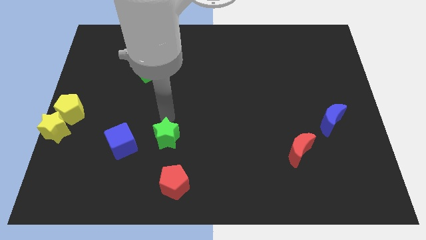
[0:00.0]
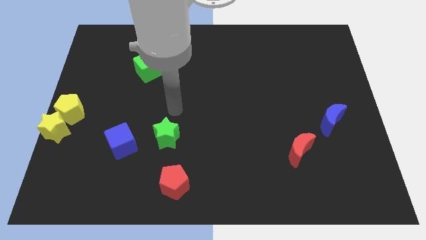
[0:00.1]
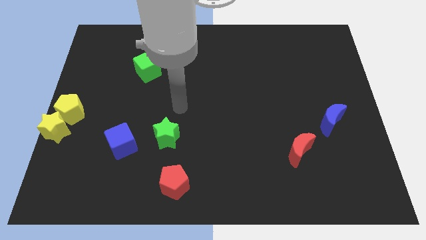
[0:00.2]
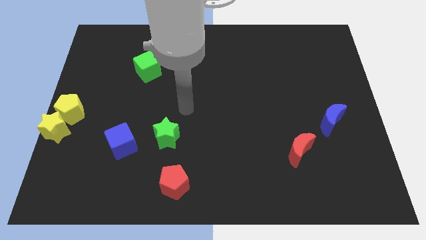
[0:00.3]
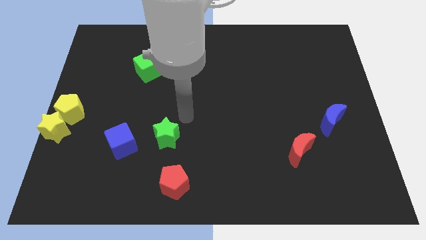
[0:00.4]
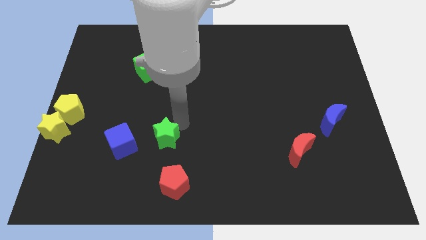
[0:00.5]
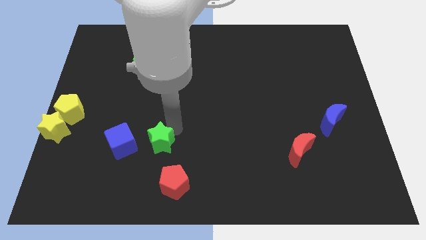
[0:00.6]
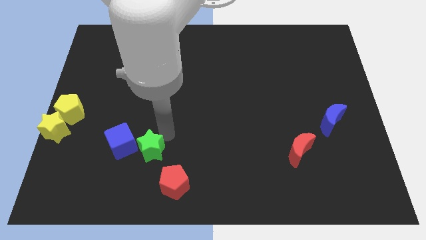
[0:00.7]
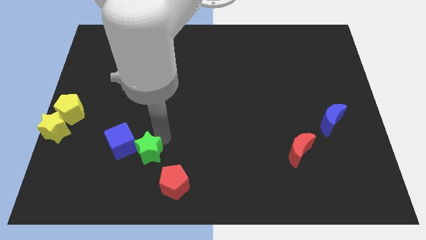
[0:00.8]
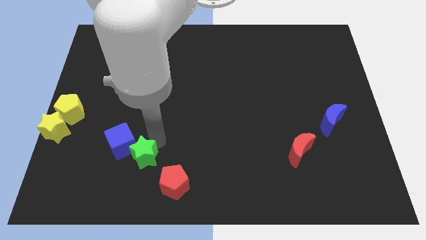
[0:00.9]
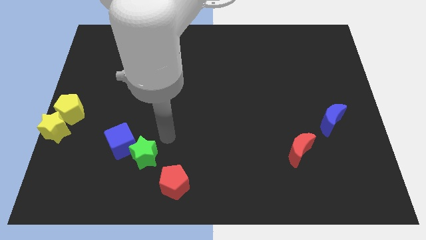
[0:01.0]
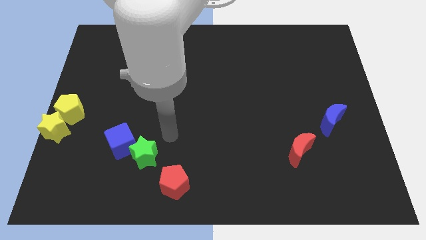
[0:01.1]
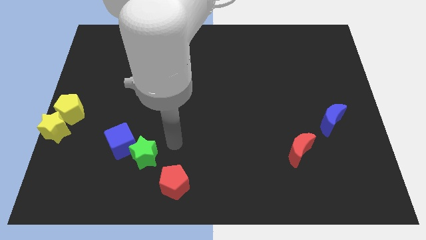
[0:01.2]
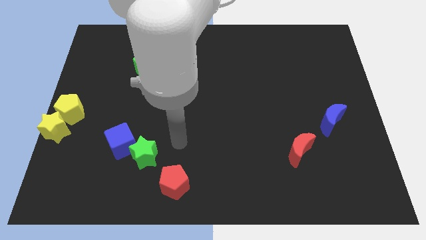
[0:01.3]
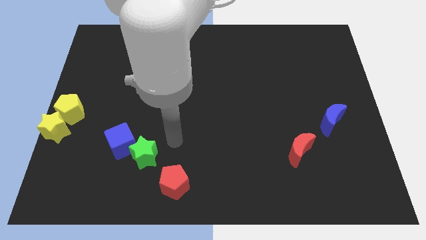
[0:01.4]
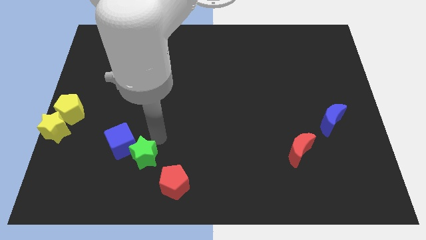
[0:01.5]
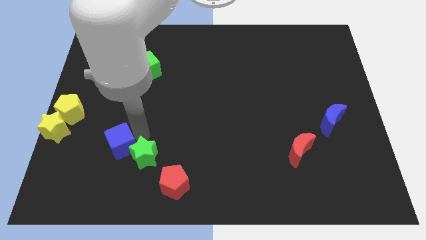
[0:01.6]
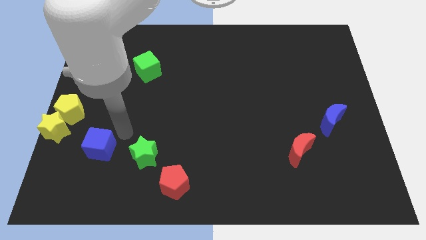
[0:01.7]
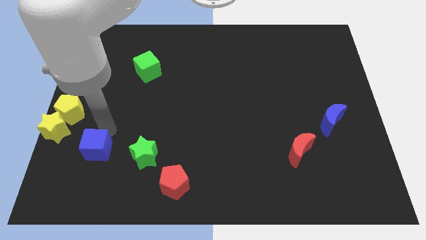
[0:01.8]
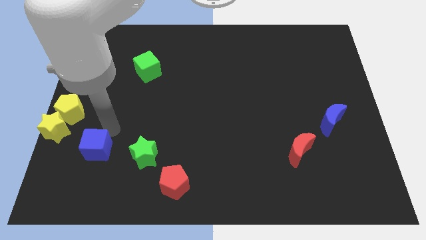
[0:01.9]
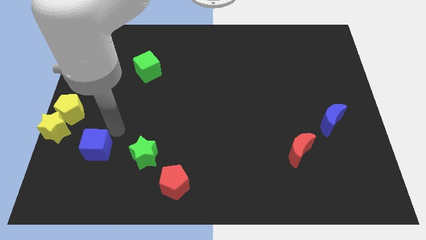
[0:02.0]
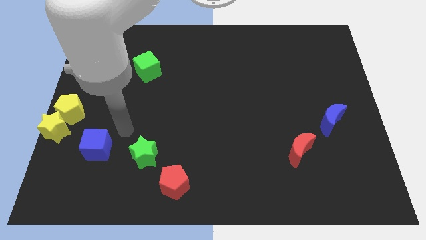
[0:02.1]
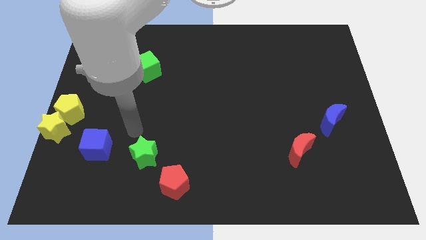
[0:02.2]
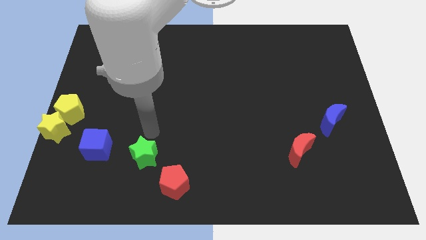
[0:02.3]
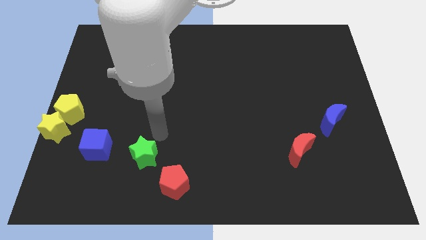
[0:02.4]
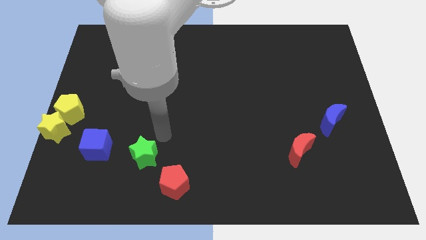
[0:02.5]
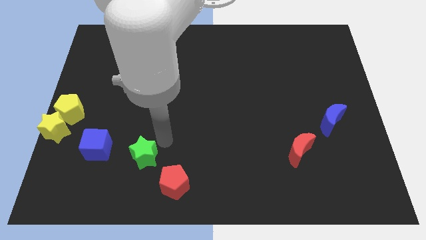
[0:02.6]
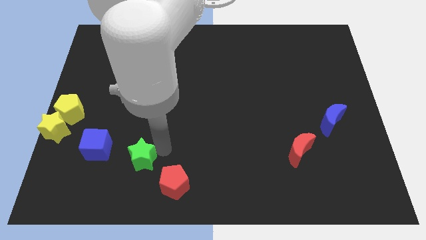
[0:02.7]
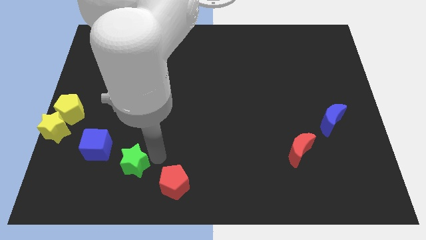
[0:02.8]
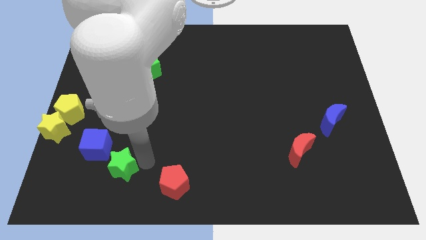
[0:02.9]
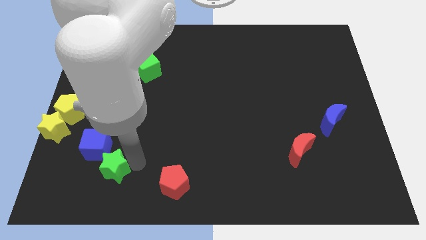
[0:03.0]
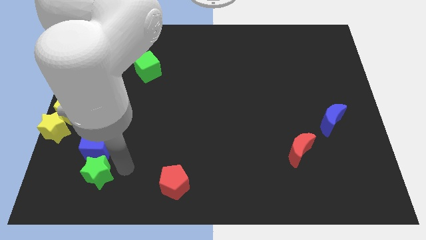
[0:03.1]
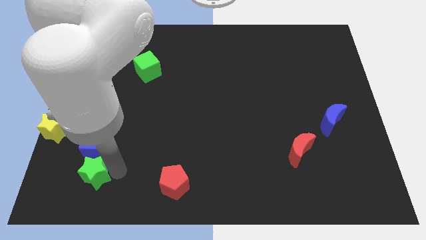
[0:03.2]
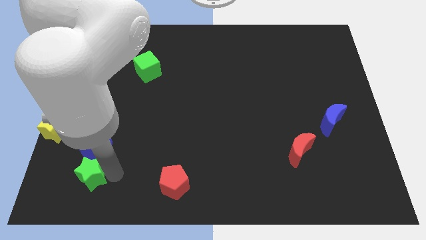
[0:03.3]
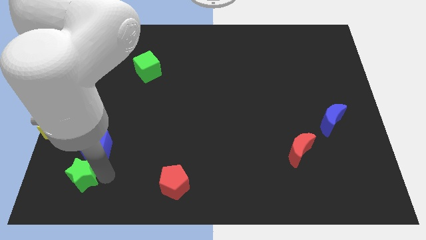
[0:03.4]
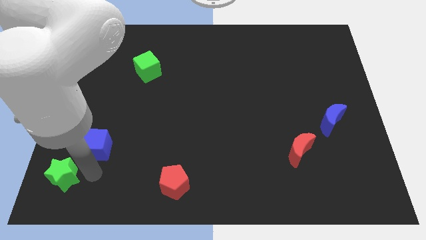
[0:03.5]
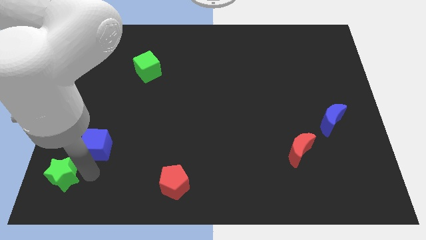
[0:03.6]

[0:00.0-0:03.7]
push the green star to the bottom left side of the blue cube

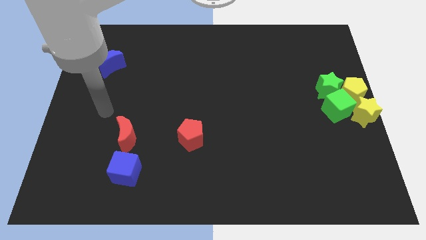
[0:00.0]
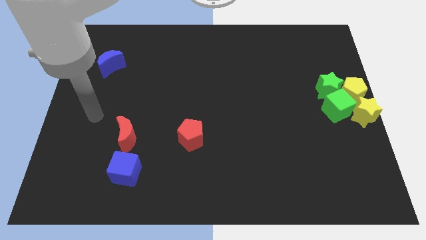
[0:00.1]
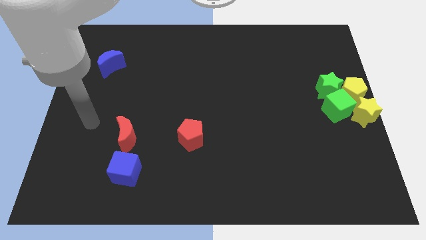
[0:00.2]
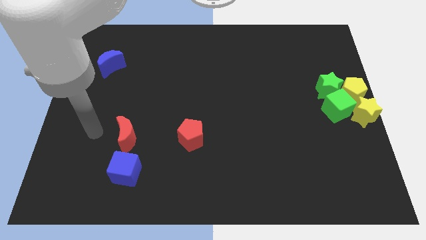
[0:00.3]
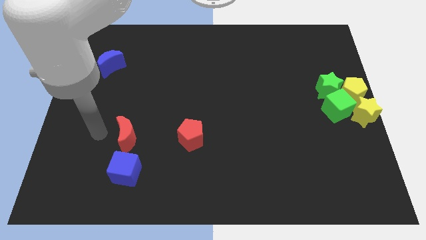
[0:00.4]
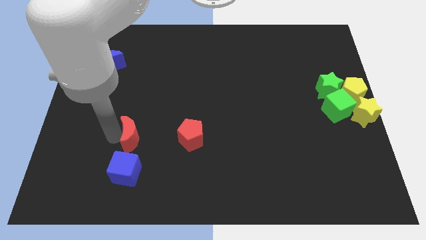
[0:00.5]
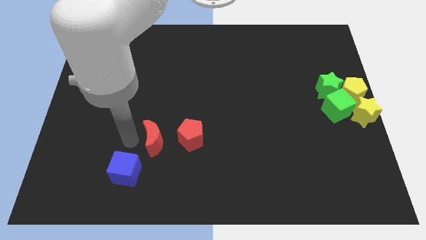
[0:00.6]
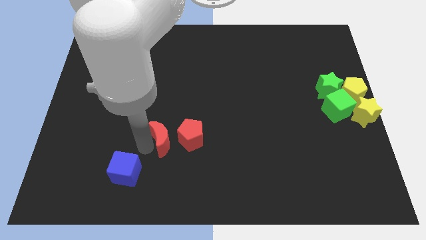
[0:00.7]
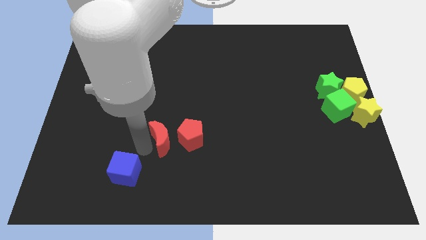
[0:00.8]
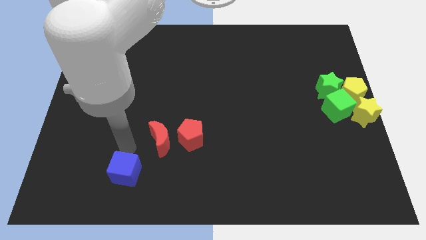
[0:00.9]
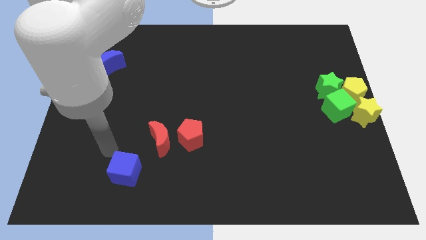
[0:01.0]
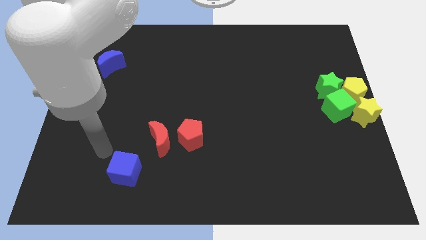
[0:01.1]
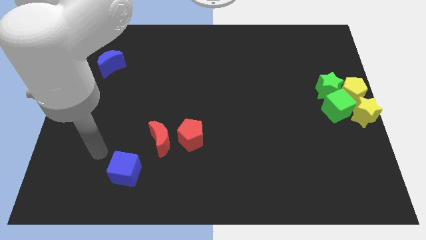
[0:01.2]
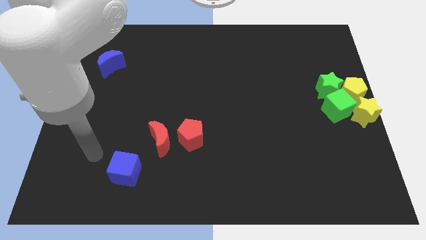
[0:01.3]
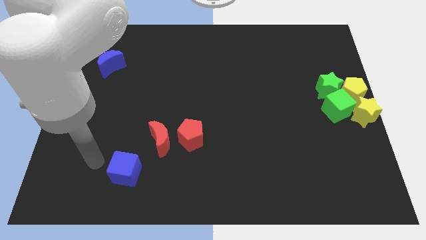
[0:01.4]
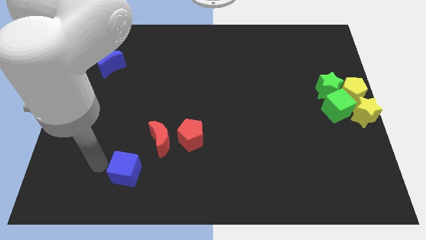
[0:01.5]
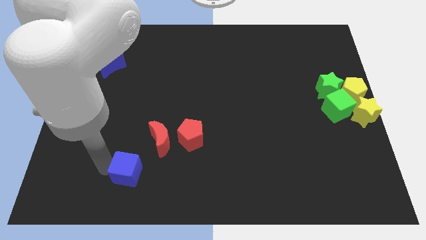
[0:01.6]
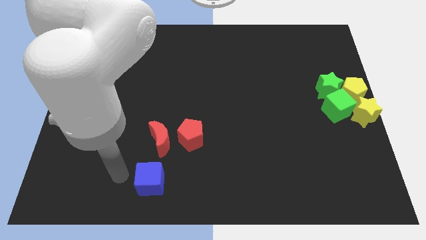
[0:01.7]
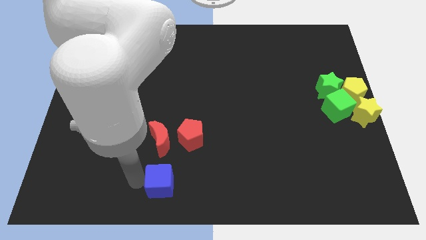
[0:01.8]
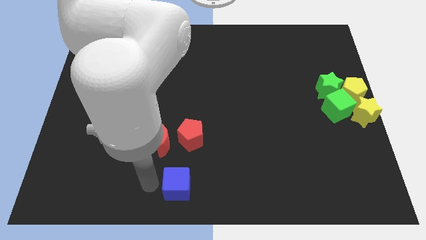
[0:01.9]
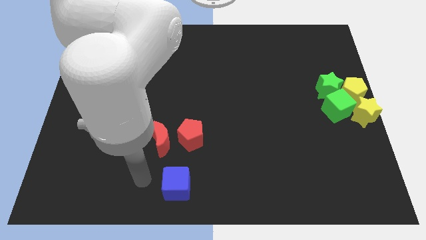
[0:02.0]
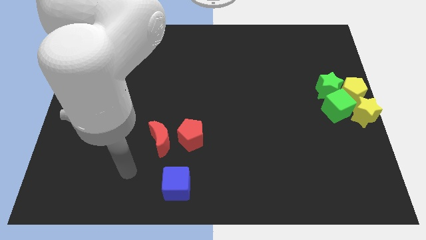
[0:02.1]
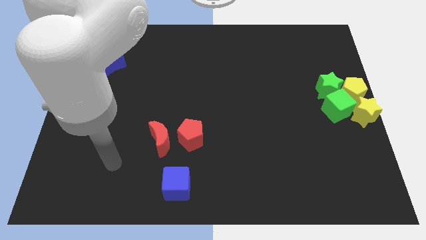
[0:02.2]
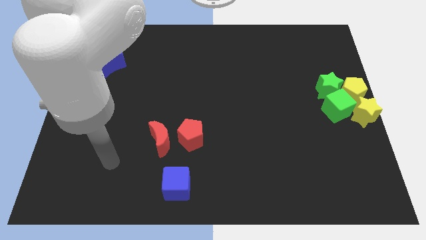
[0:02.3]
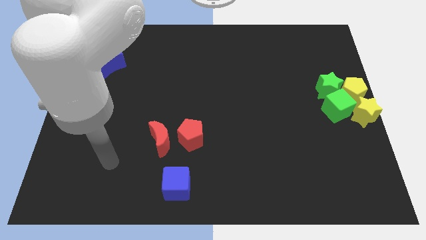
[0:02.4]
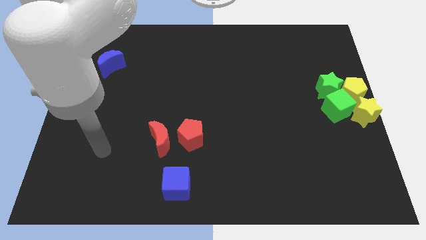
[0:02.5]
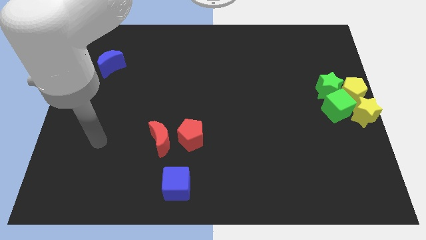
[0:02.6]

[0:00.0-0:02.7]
place the blue cube bottom right to the red moon

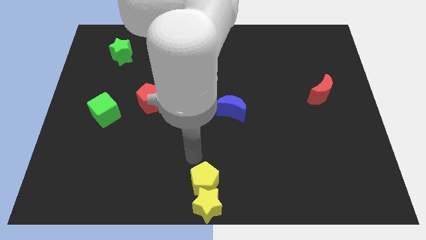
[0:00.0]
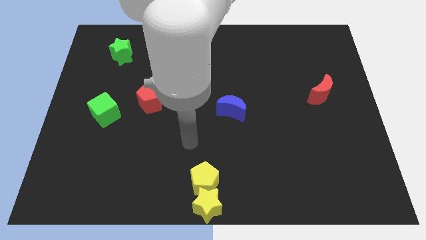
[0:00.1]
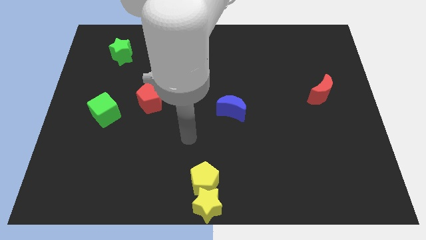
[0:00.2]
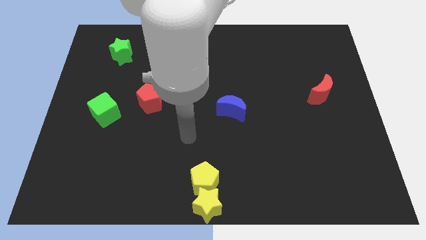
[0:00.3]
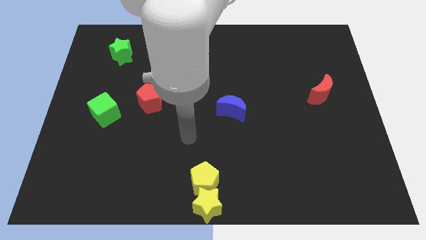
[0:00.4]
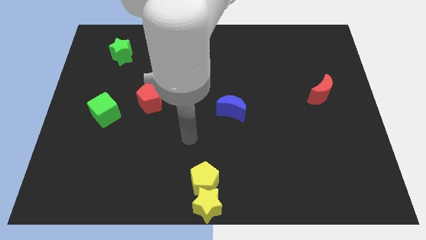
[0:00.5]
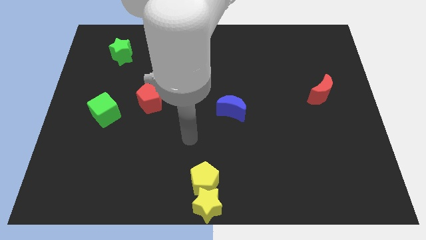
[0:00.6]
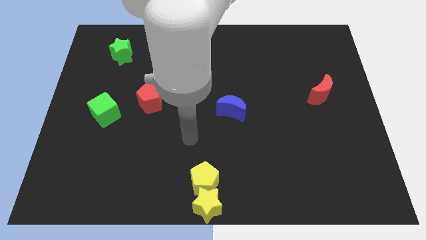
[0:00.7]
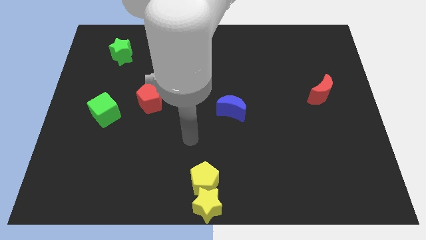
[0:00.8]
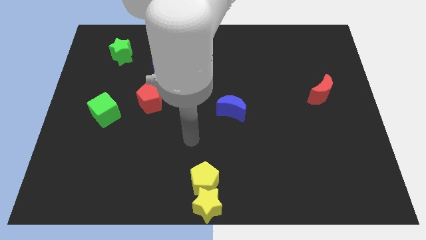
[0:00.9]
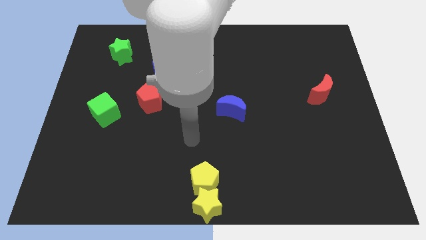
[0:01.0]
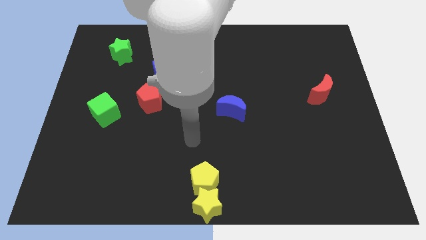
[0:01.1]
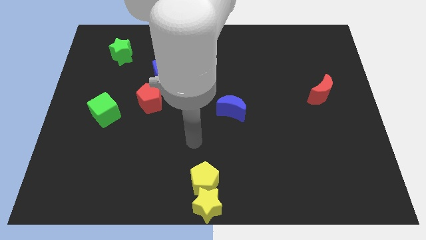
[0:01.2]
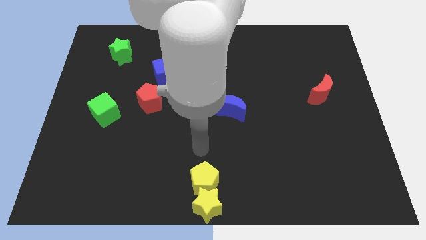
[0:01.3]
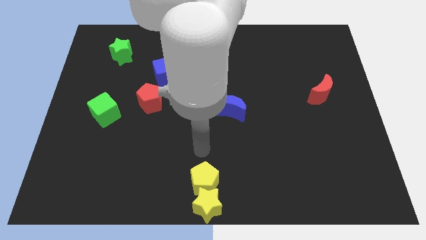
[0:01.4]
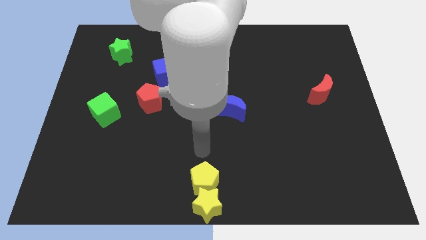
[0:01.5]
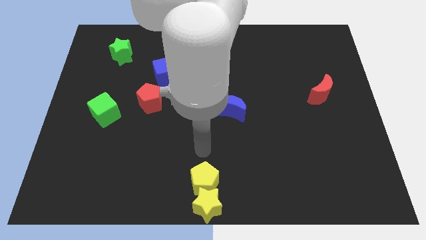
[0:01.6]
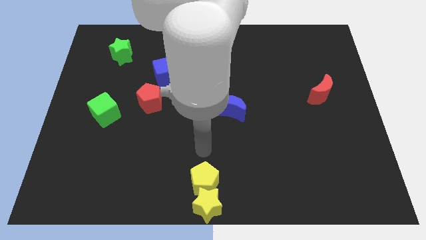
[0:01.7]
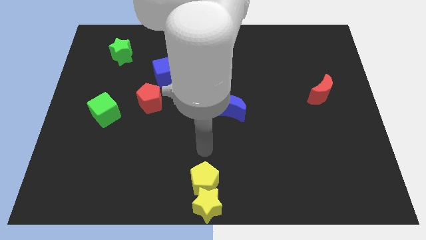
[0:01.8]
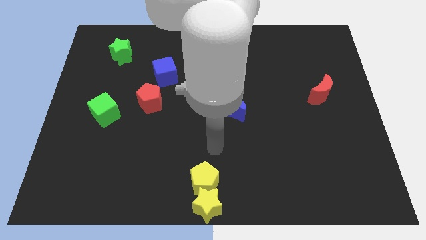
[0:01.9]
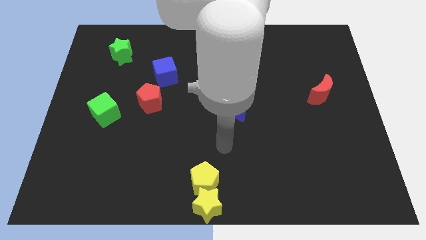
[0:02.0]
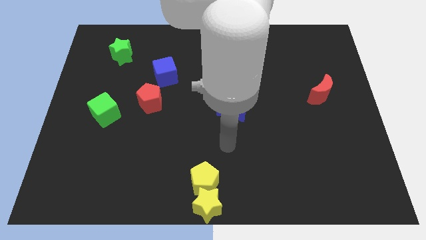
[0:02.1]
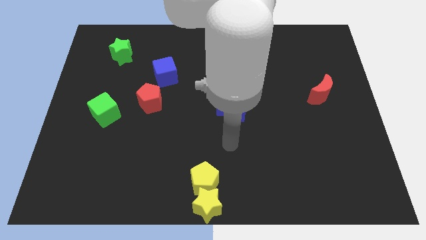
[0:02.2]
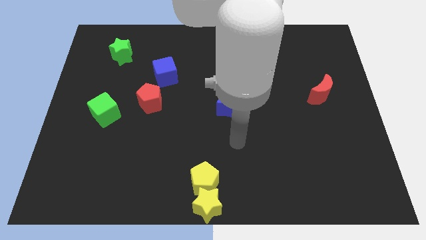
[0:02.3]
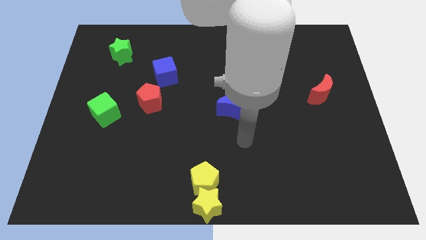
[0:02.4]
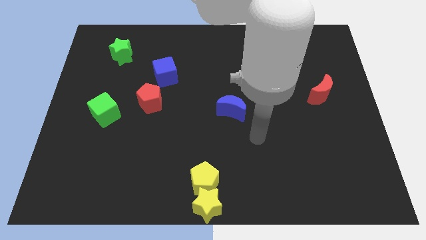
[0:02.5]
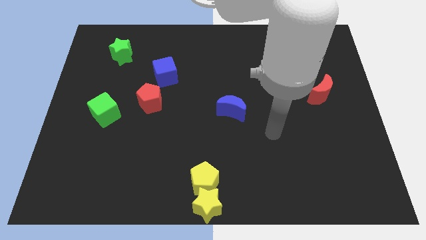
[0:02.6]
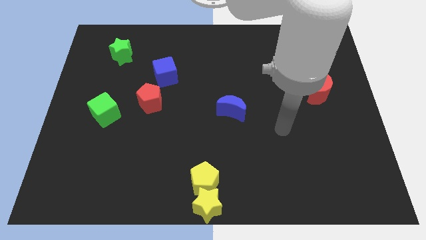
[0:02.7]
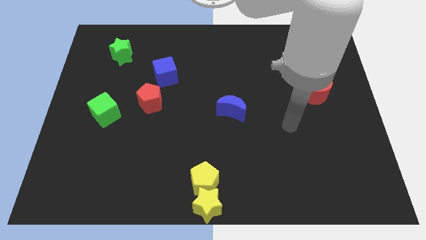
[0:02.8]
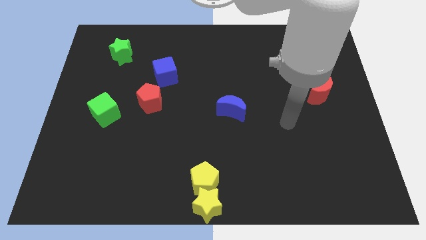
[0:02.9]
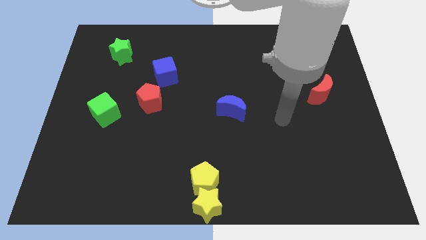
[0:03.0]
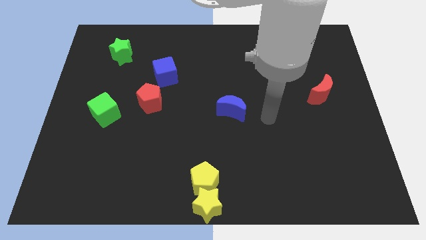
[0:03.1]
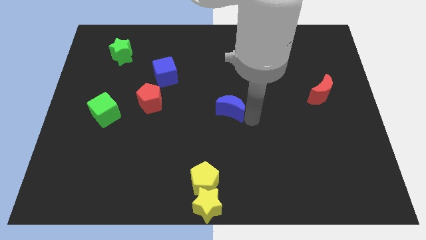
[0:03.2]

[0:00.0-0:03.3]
point the arm to the right of the blue crescent
